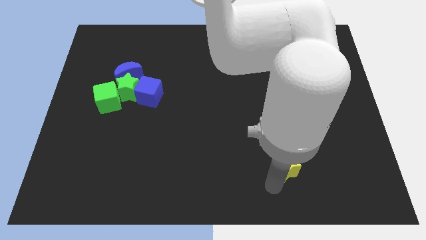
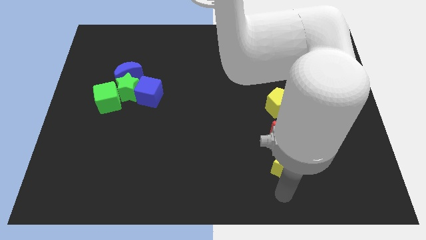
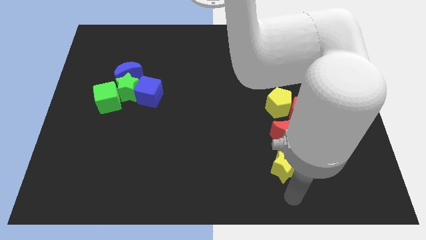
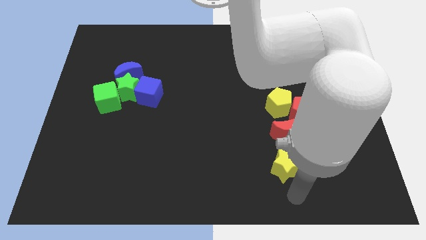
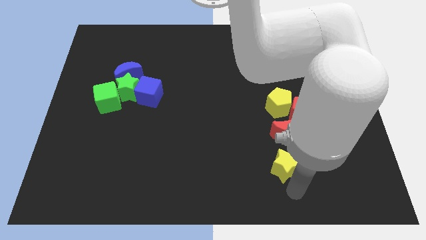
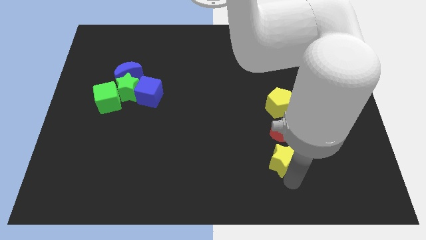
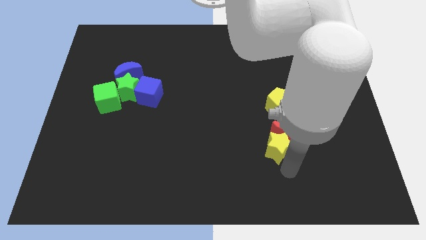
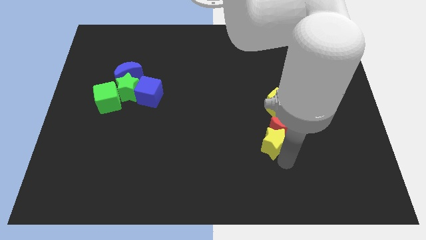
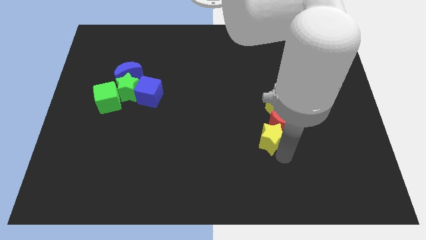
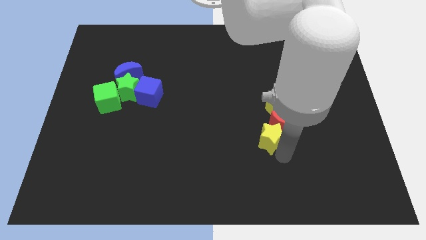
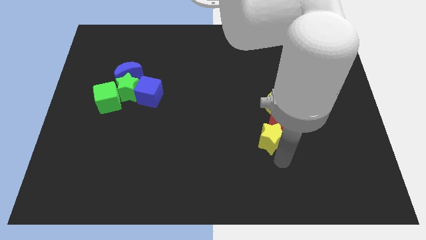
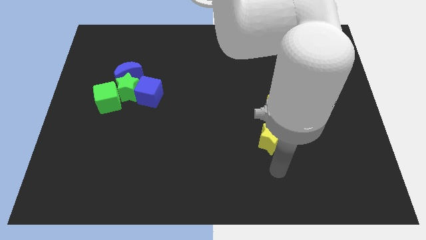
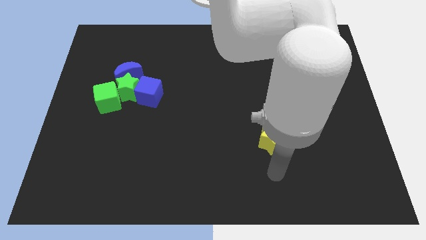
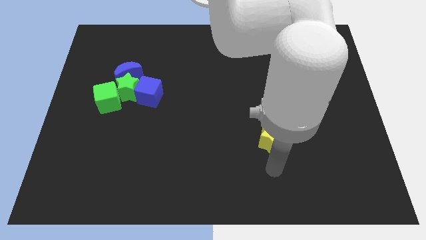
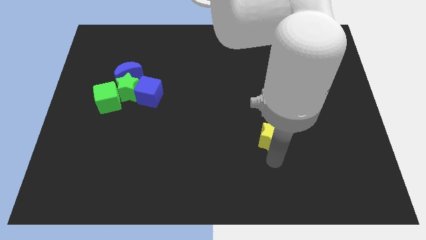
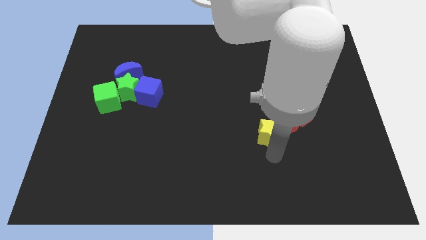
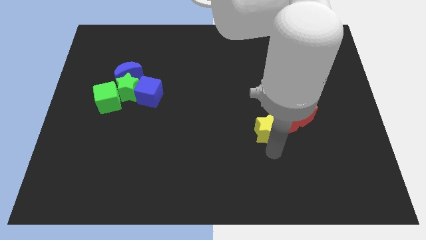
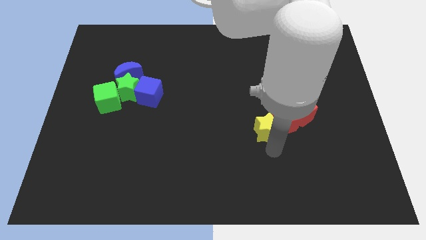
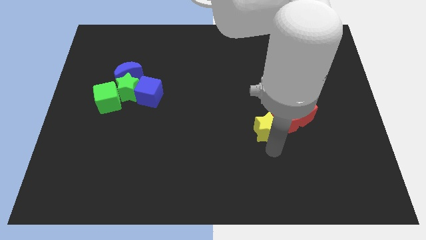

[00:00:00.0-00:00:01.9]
push the yellow star close to the red crescent

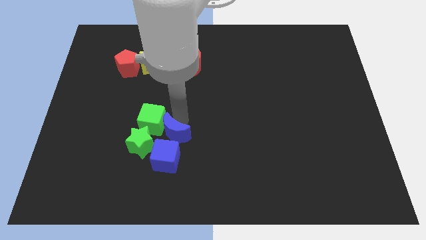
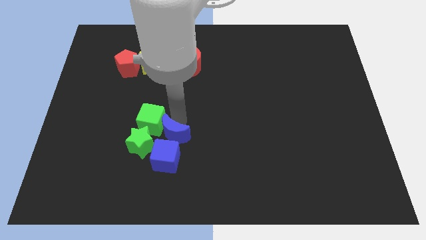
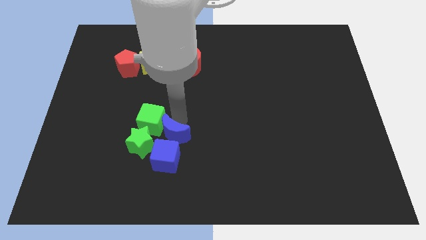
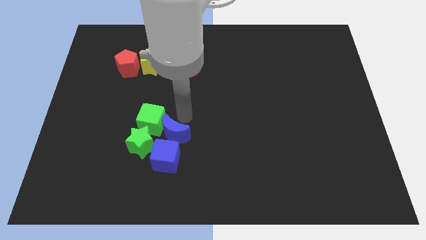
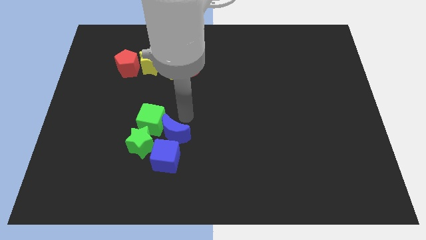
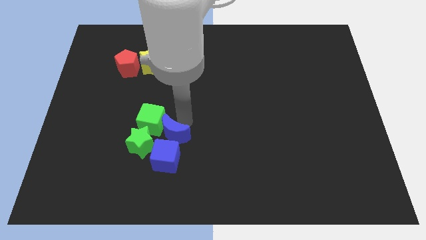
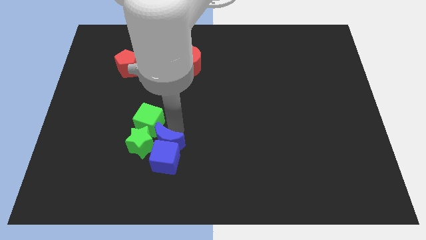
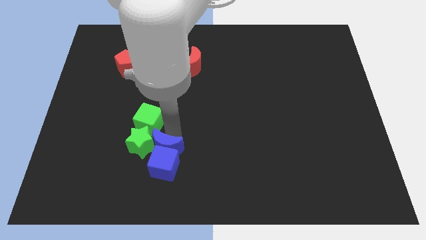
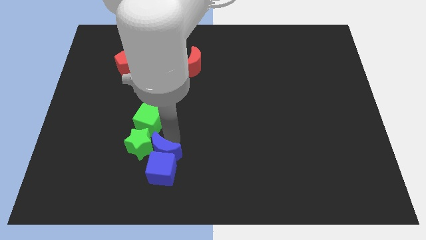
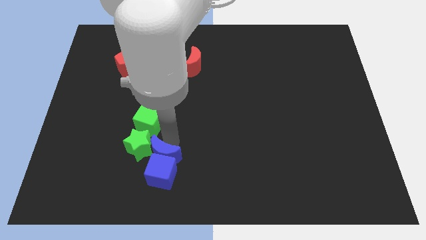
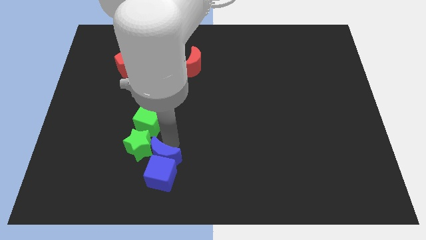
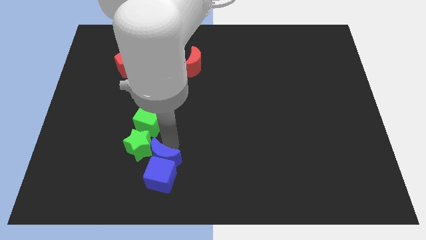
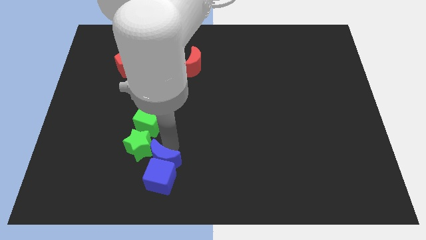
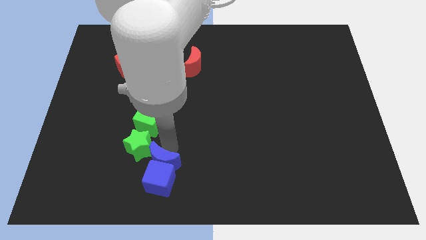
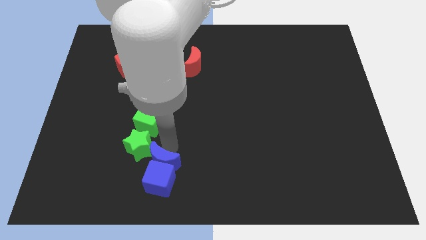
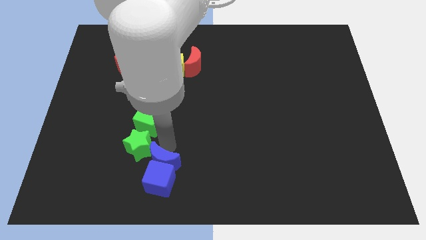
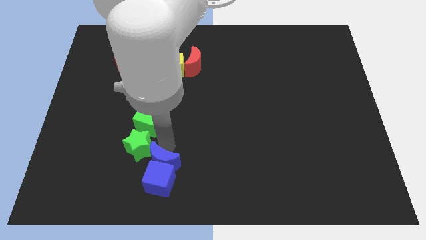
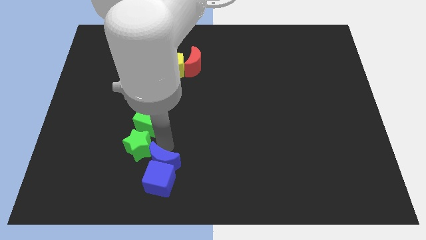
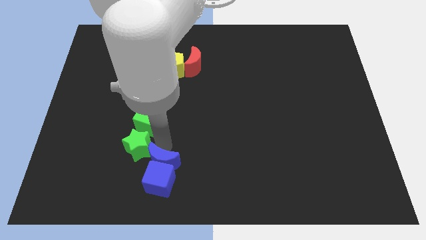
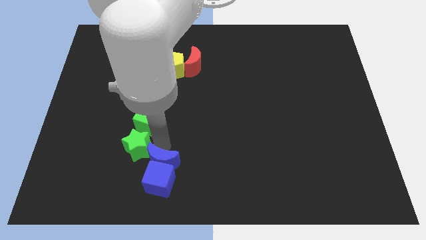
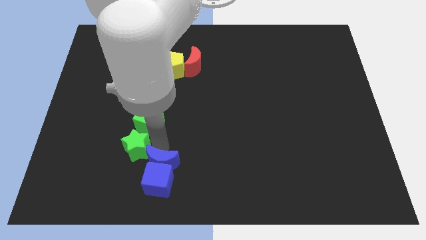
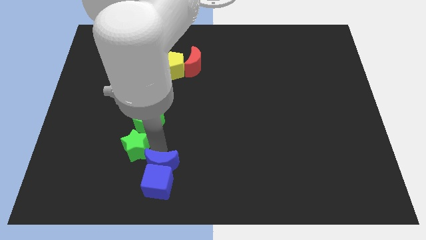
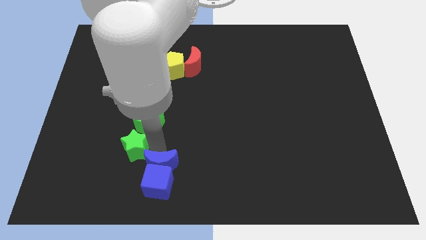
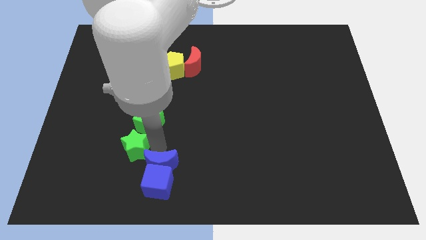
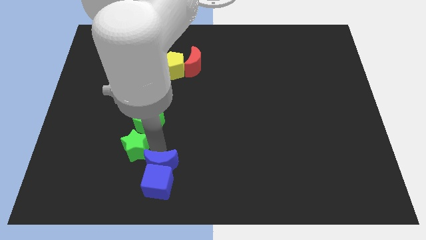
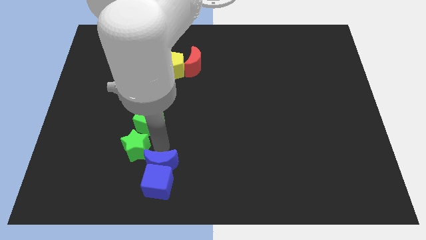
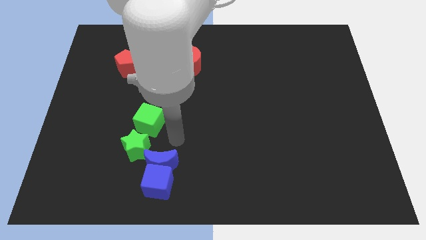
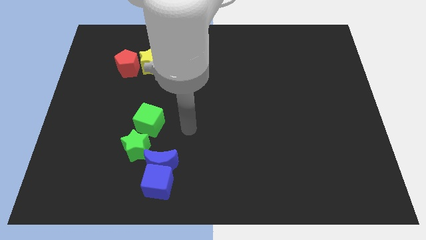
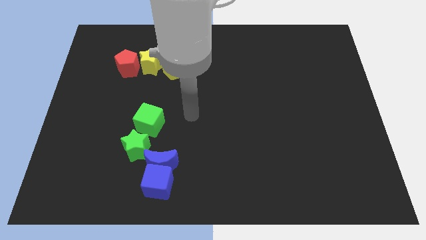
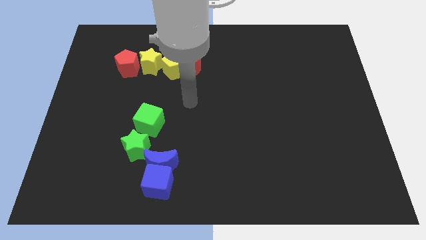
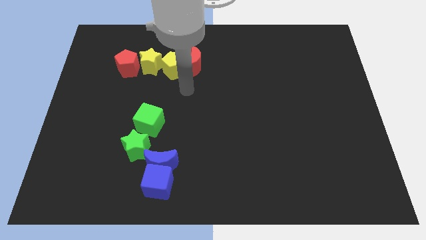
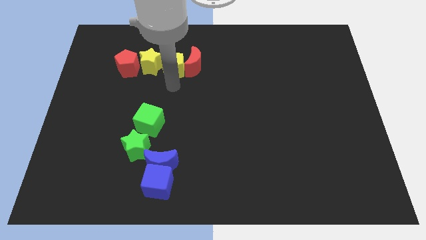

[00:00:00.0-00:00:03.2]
move the blue moon into the blue cube

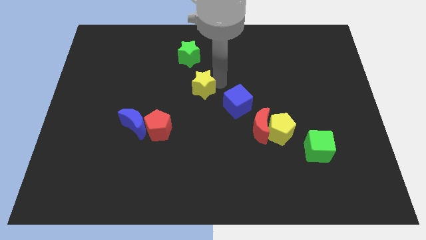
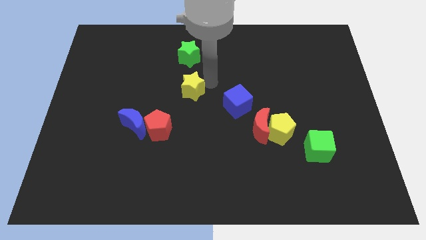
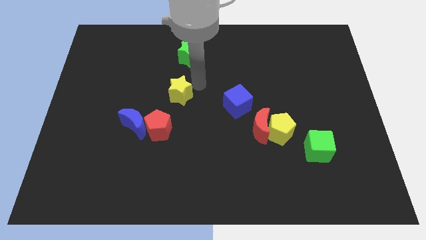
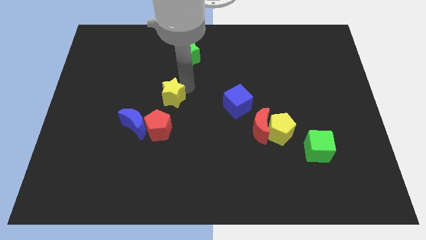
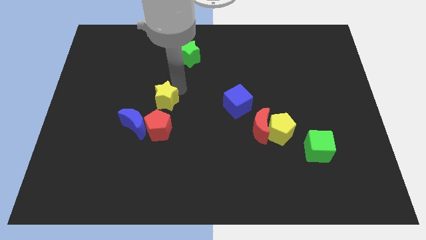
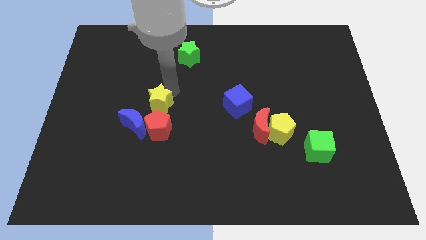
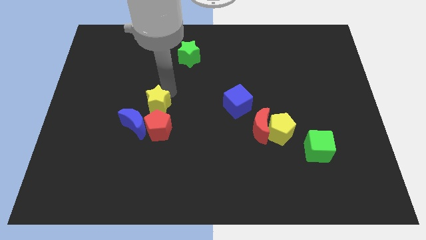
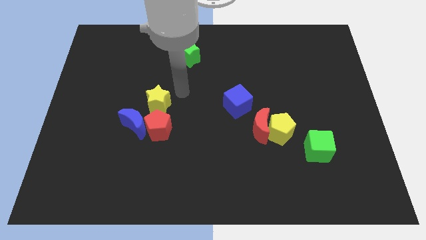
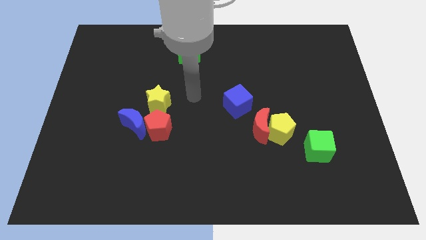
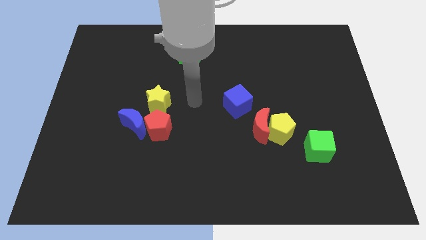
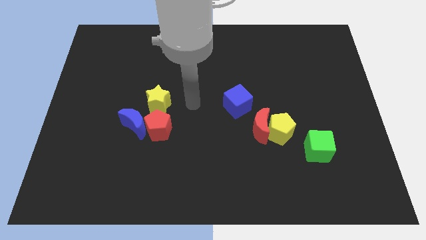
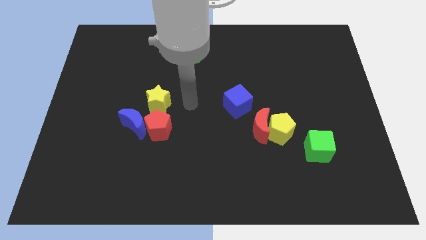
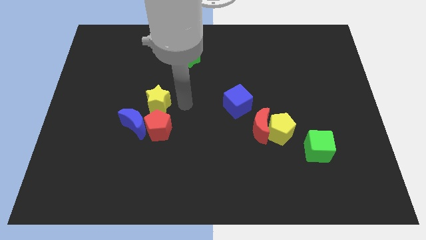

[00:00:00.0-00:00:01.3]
push the yellow star to the top of the red pentagon

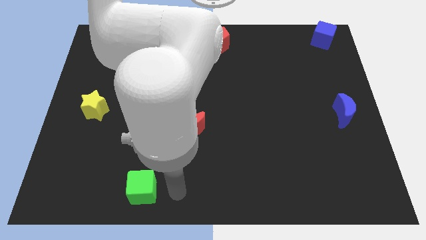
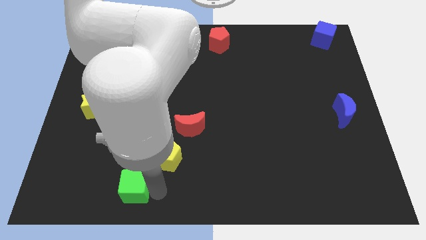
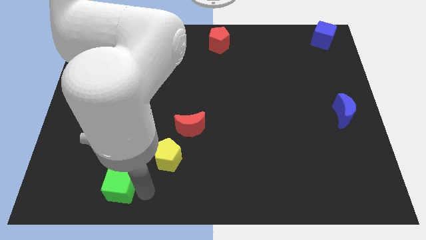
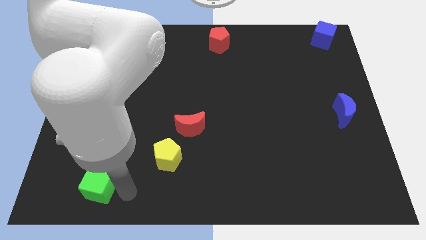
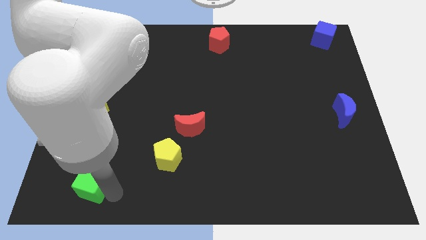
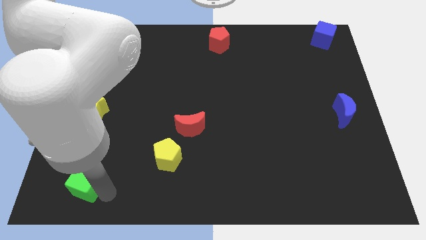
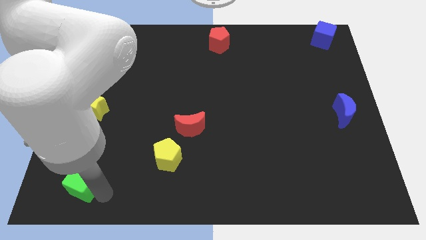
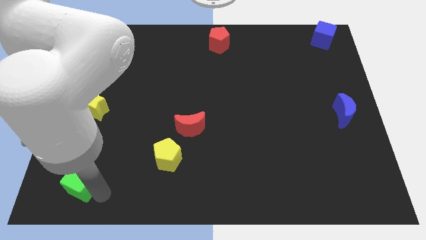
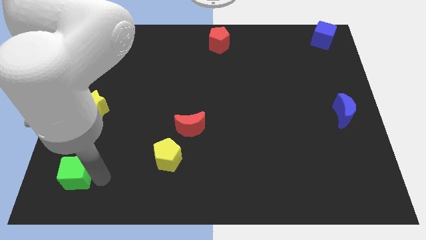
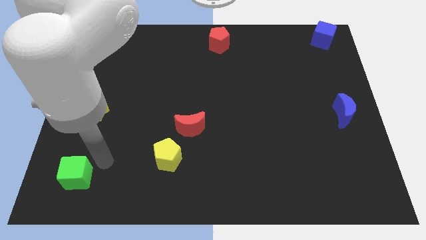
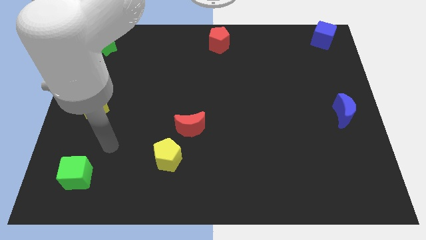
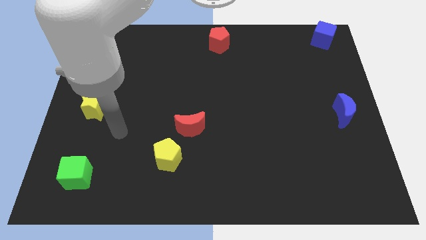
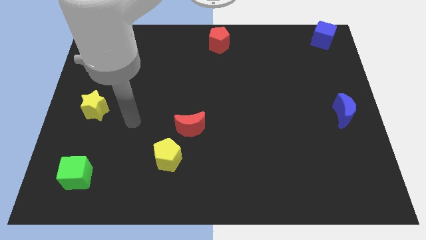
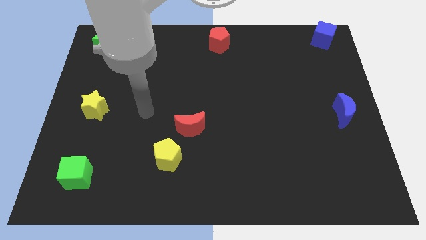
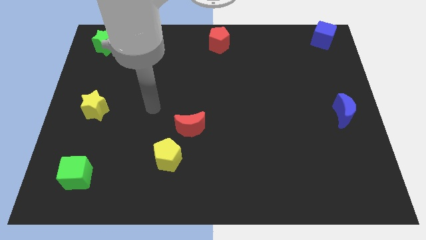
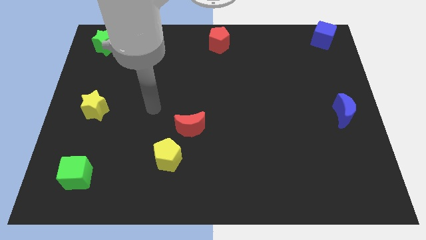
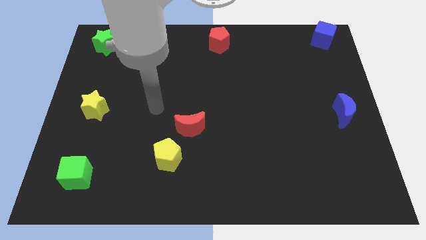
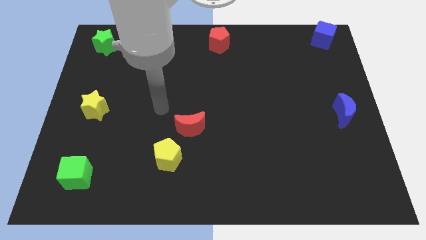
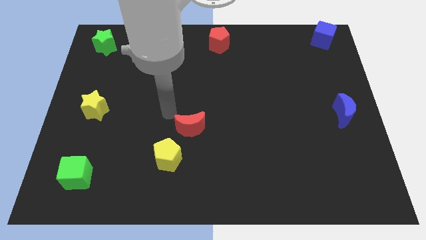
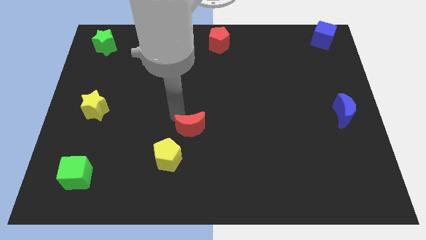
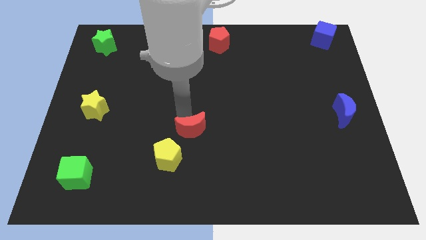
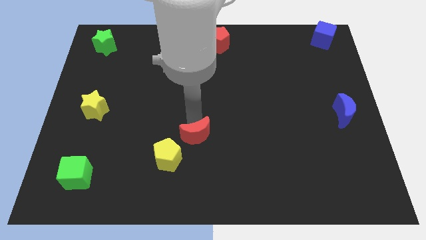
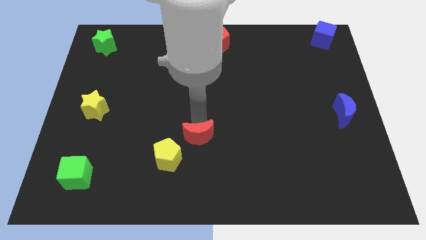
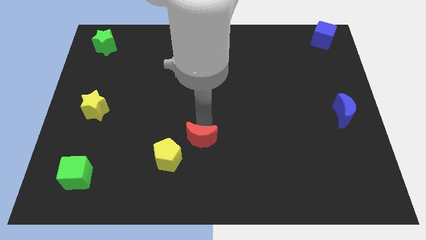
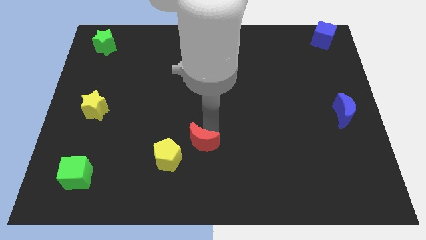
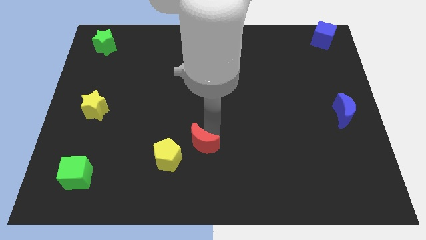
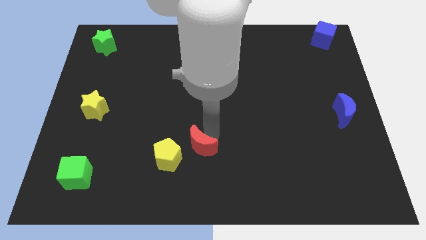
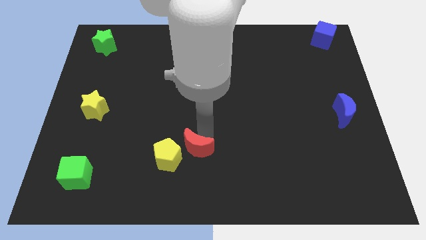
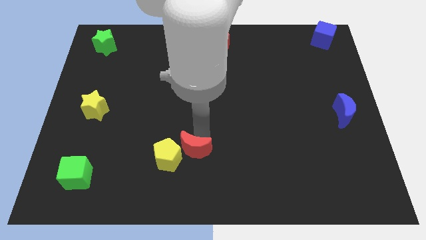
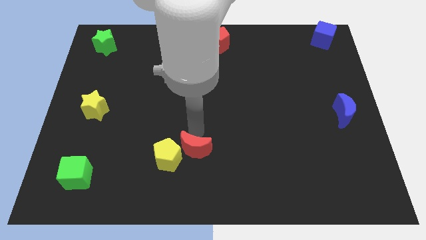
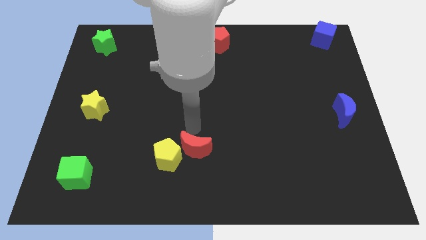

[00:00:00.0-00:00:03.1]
move red moon beside yellow pentagon
